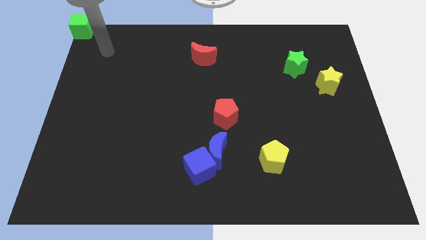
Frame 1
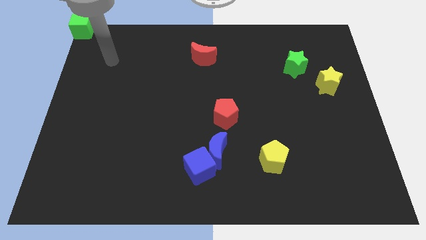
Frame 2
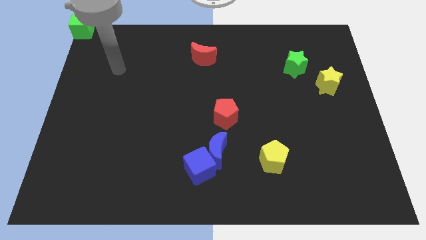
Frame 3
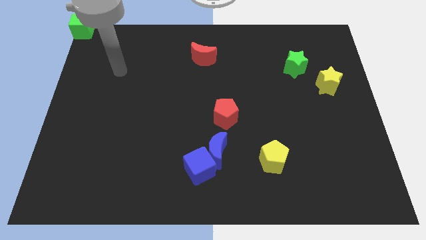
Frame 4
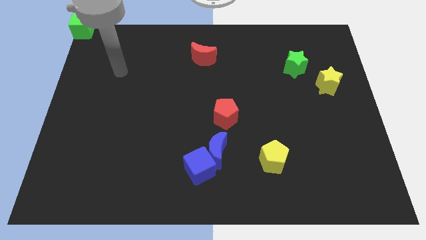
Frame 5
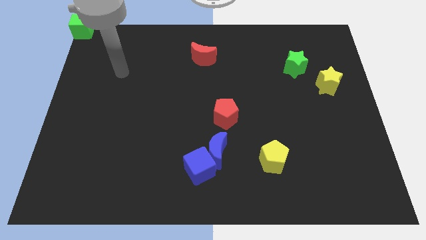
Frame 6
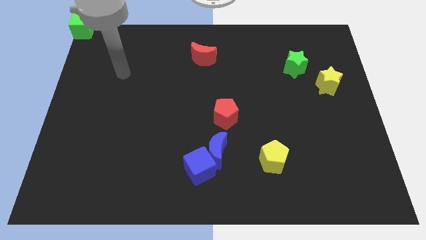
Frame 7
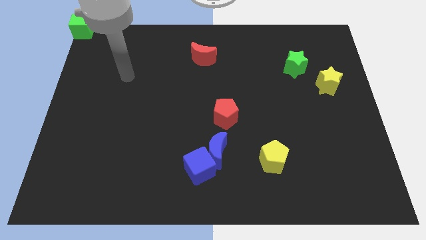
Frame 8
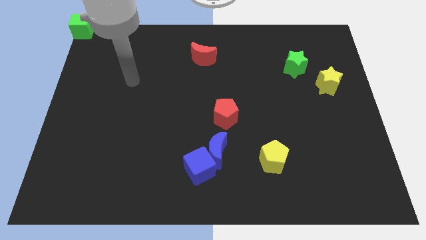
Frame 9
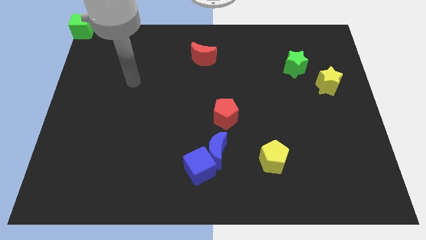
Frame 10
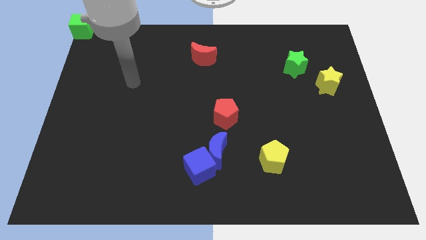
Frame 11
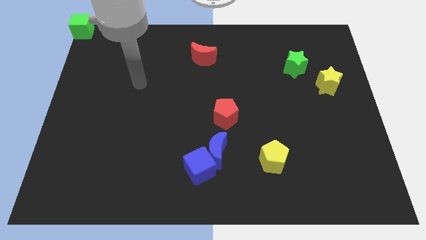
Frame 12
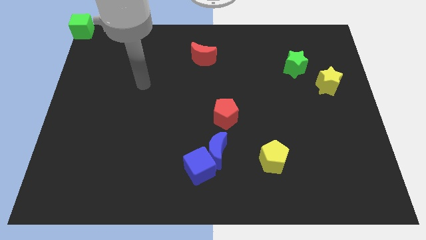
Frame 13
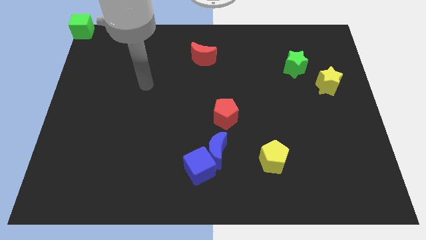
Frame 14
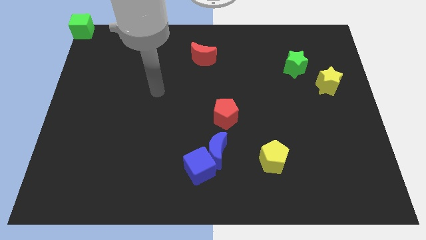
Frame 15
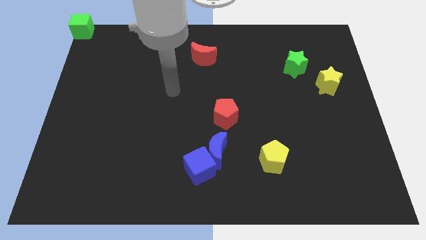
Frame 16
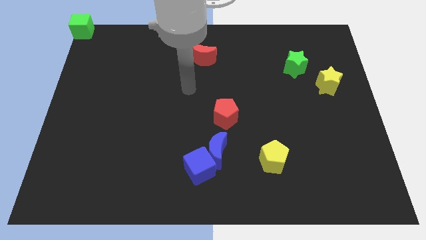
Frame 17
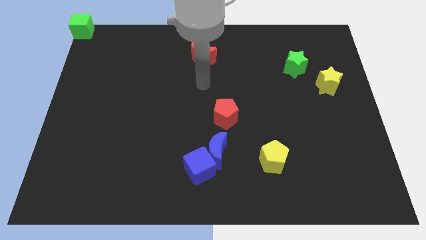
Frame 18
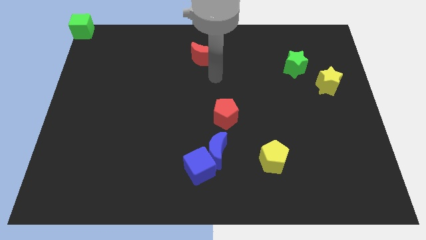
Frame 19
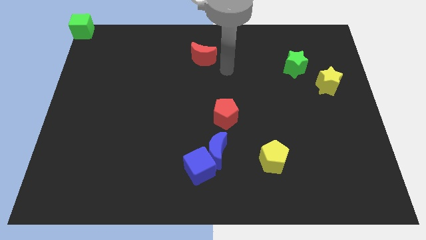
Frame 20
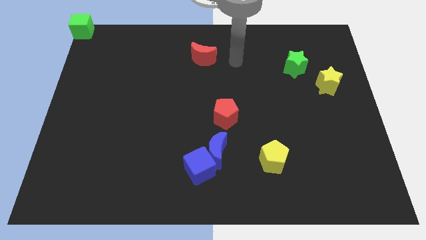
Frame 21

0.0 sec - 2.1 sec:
point your arm at the right of the red crescent

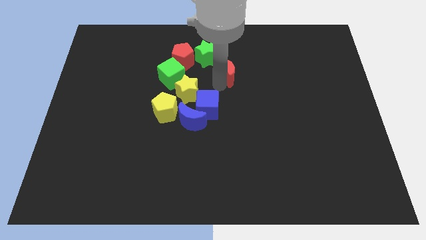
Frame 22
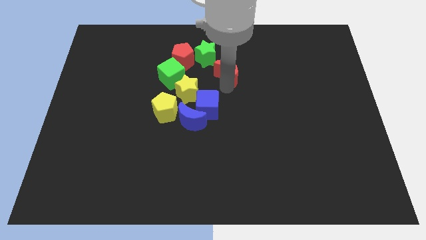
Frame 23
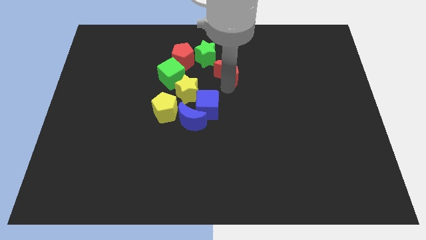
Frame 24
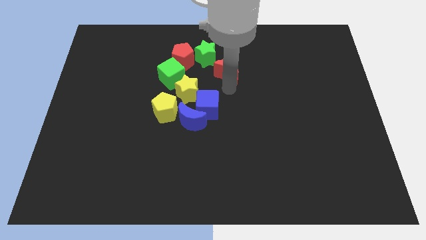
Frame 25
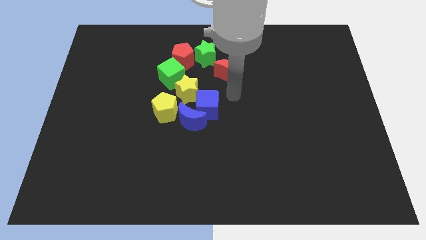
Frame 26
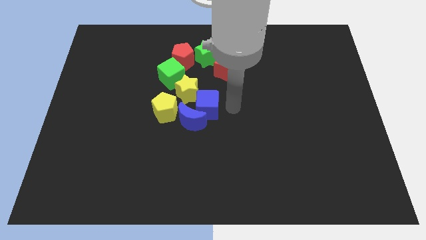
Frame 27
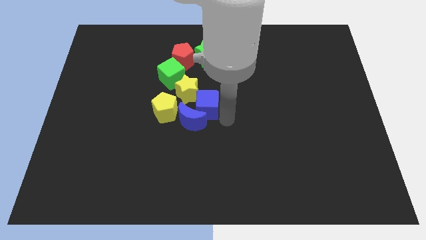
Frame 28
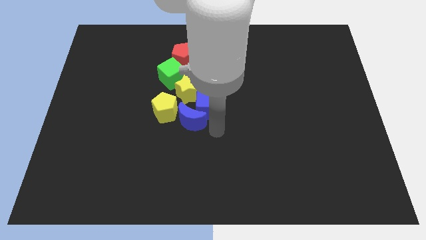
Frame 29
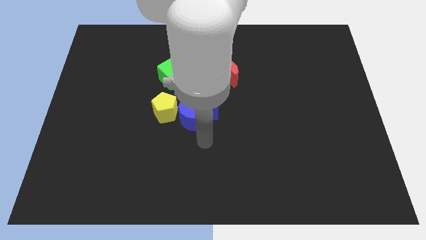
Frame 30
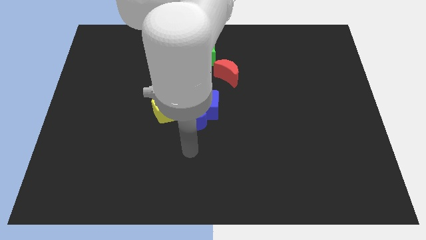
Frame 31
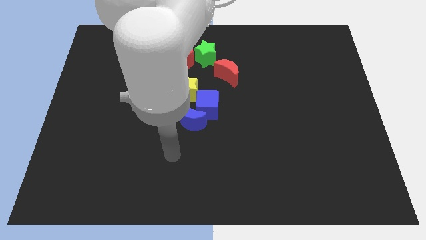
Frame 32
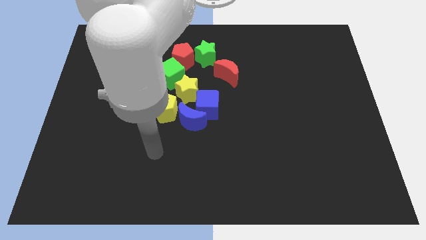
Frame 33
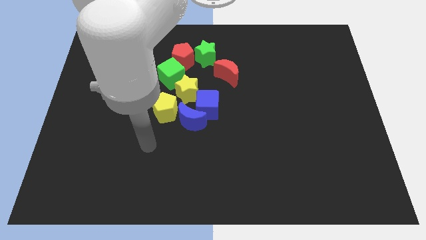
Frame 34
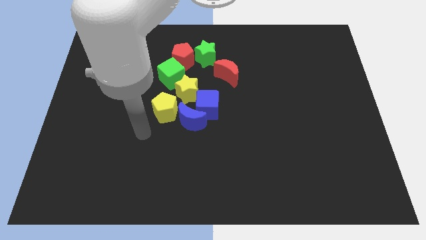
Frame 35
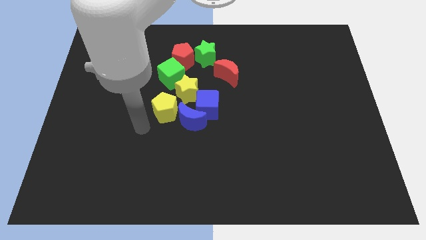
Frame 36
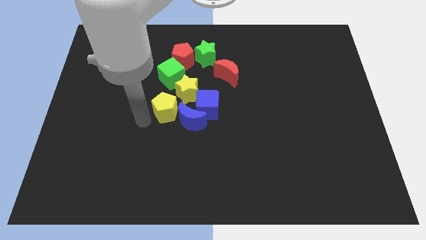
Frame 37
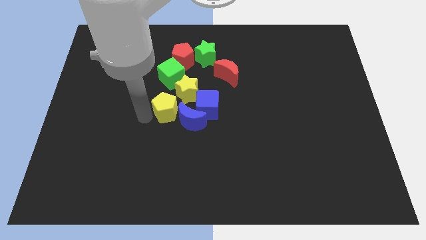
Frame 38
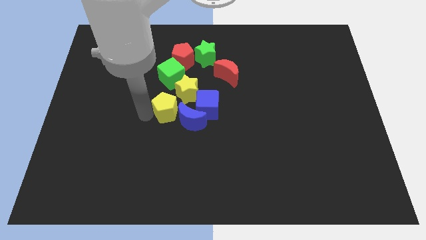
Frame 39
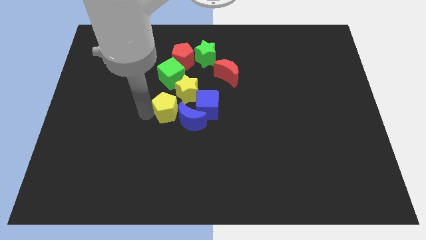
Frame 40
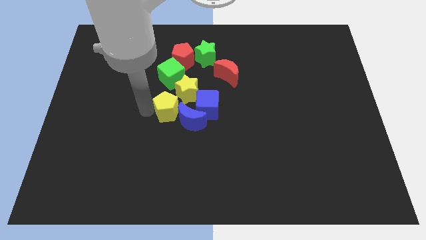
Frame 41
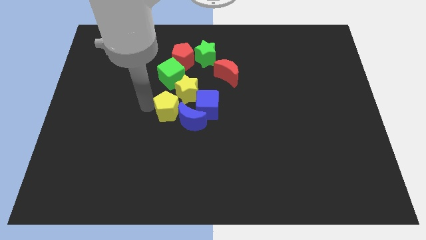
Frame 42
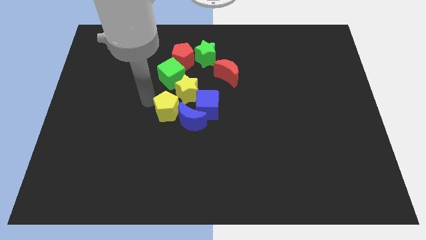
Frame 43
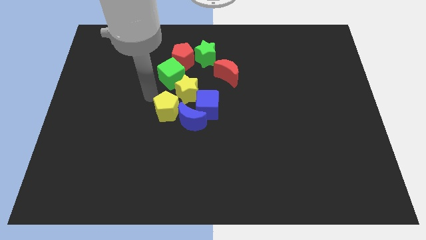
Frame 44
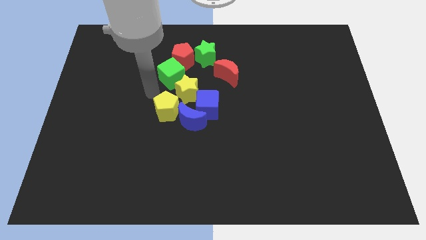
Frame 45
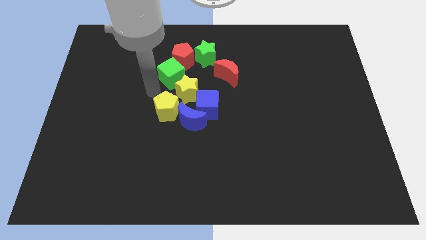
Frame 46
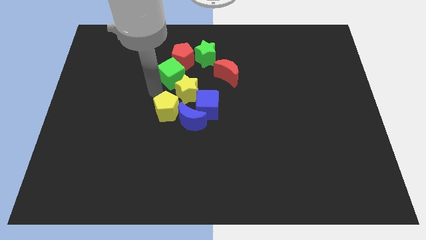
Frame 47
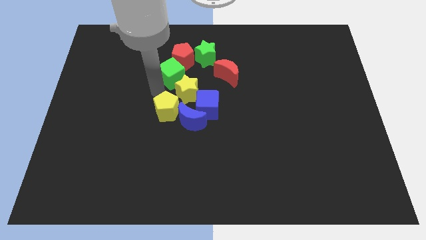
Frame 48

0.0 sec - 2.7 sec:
slightly touch the left side of the yellow pentagon

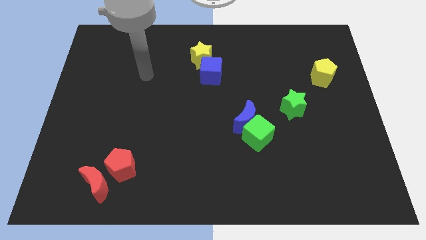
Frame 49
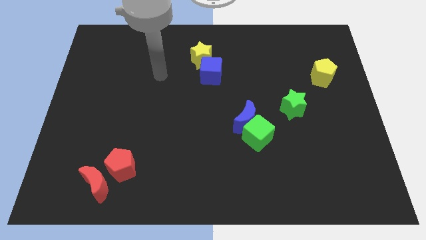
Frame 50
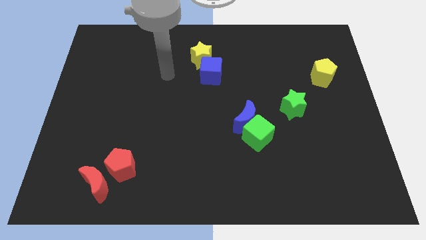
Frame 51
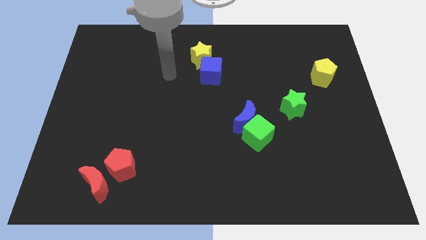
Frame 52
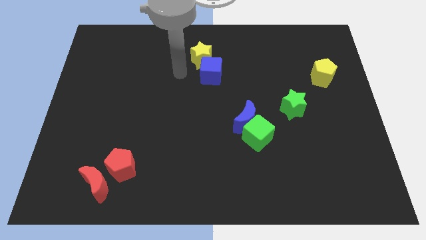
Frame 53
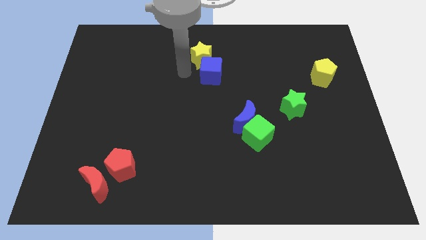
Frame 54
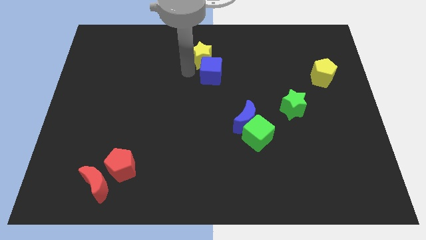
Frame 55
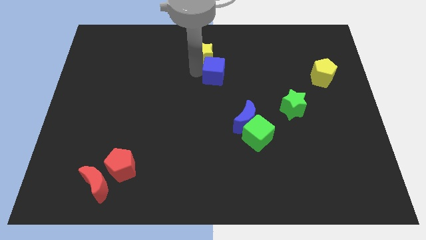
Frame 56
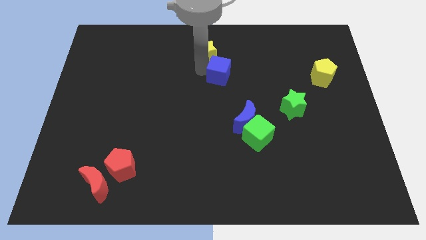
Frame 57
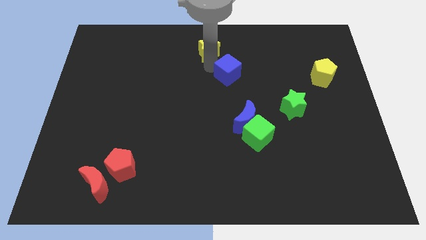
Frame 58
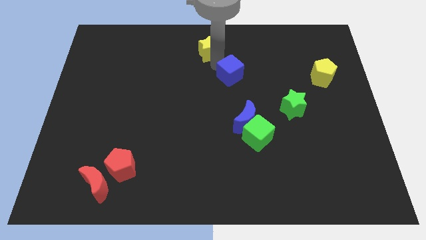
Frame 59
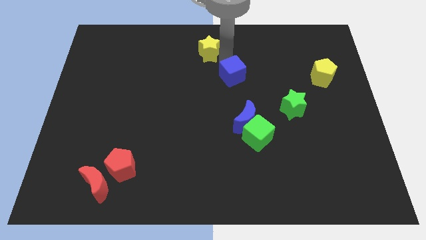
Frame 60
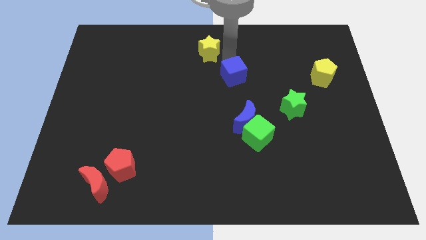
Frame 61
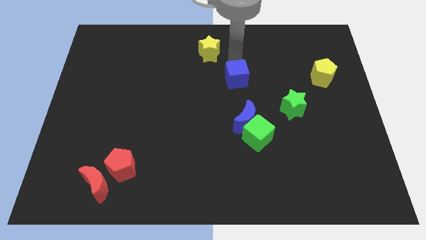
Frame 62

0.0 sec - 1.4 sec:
separate the blue cube from the yellow star

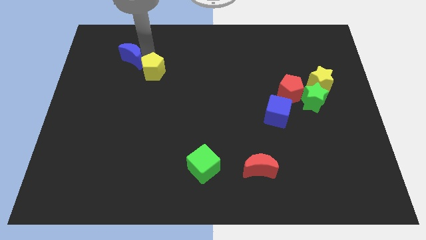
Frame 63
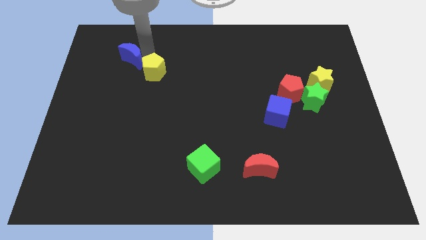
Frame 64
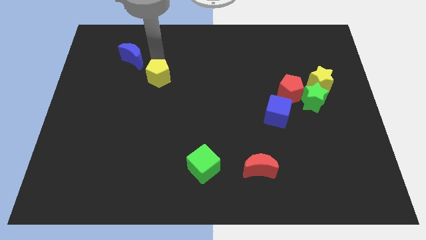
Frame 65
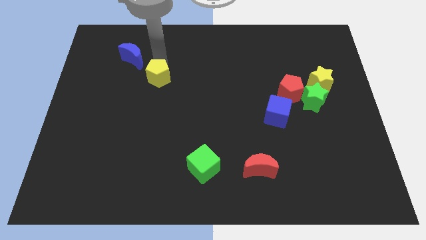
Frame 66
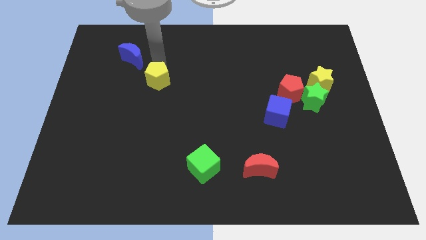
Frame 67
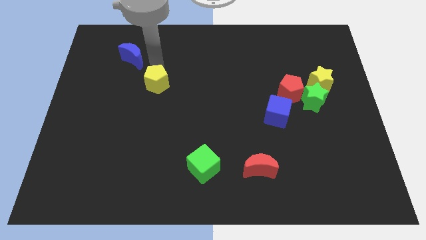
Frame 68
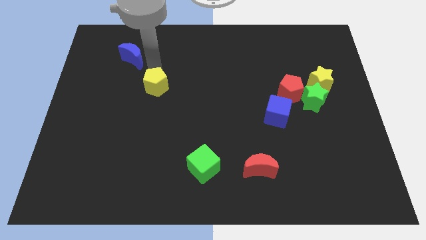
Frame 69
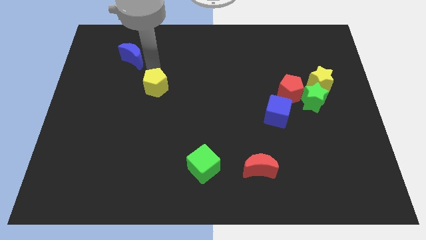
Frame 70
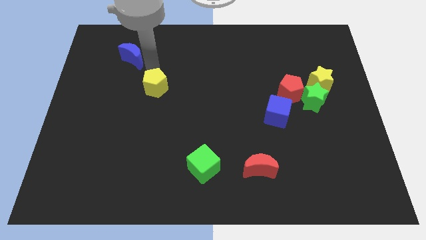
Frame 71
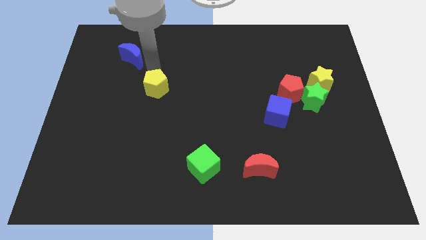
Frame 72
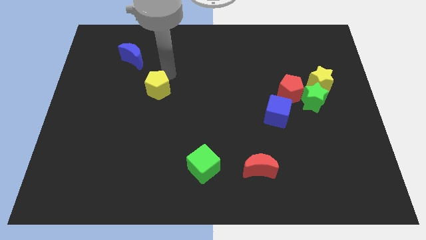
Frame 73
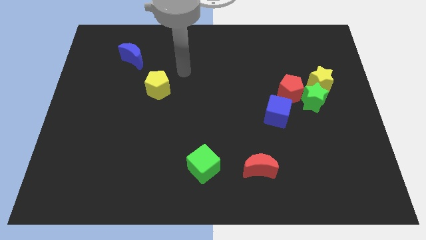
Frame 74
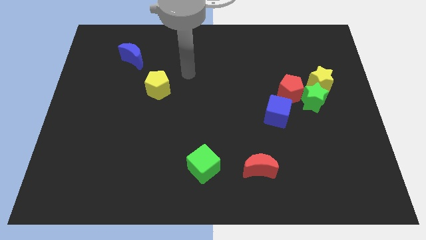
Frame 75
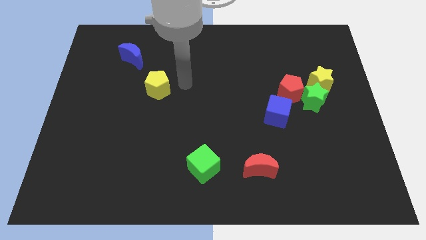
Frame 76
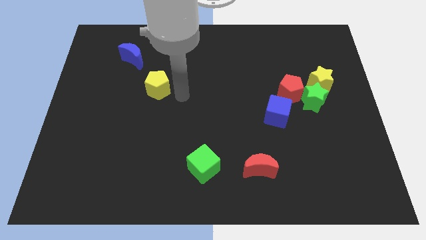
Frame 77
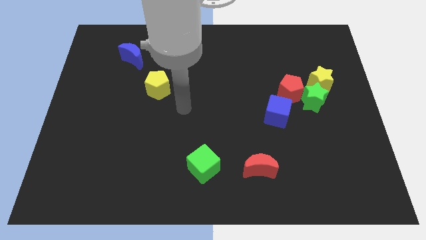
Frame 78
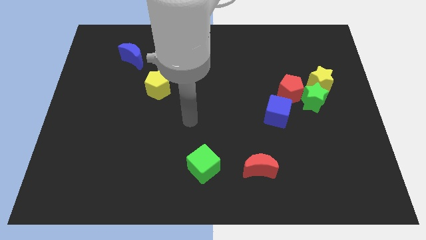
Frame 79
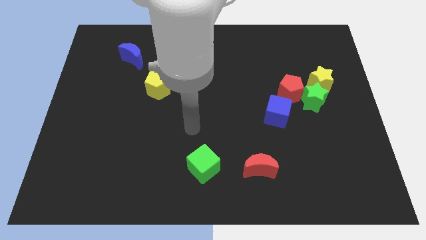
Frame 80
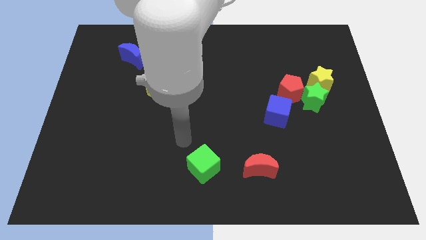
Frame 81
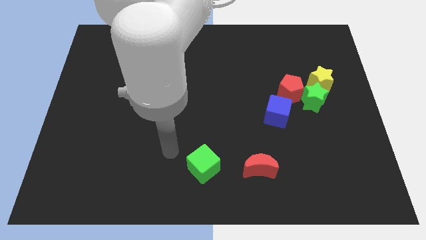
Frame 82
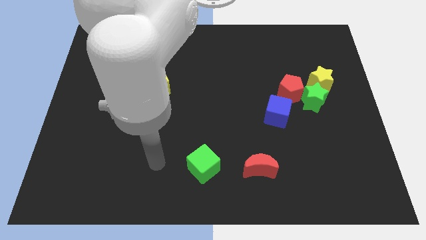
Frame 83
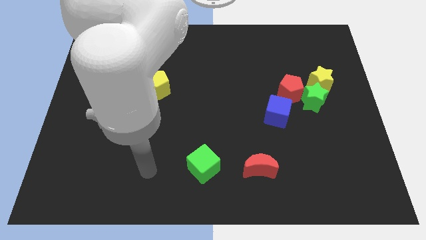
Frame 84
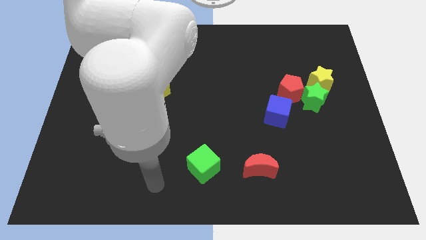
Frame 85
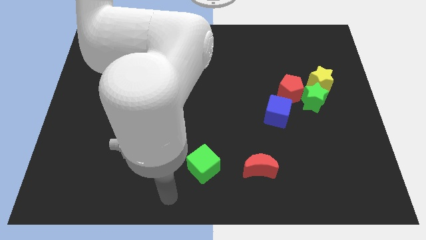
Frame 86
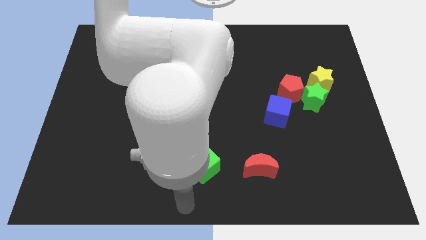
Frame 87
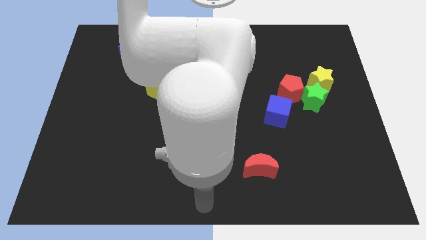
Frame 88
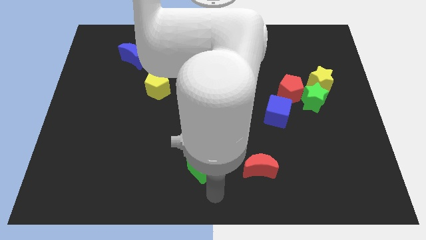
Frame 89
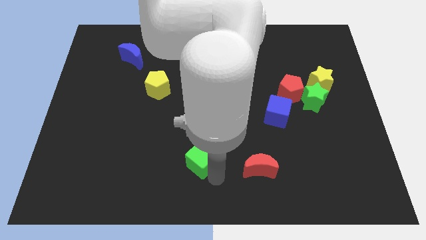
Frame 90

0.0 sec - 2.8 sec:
place yellow pentagon diagonally towards blue crescent
